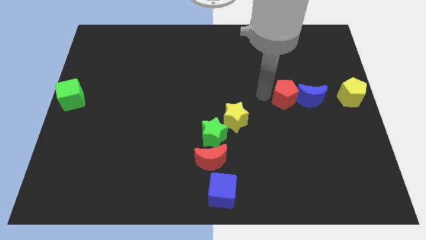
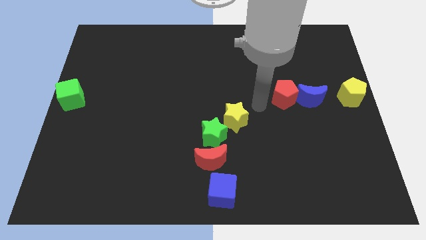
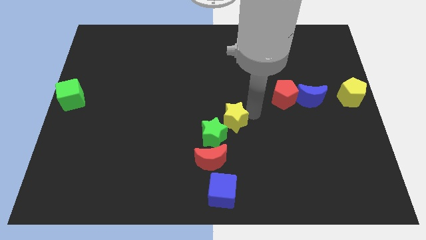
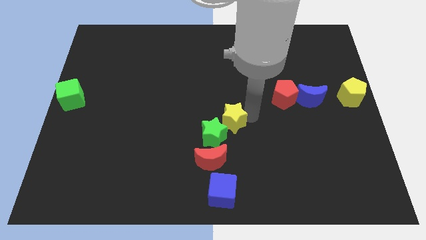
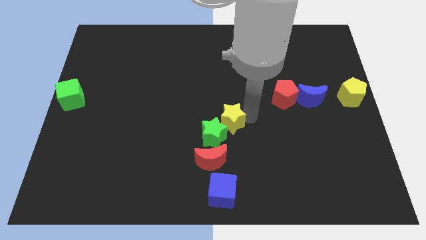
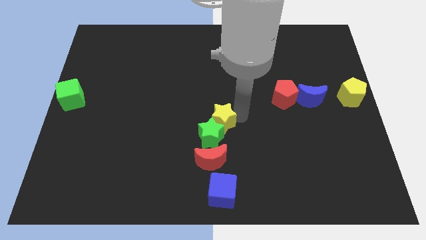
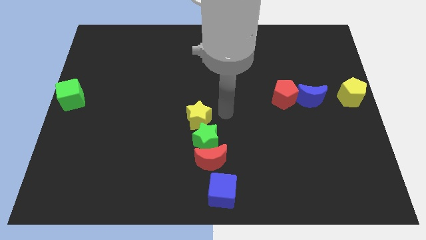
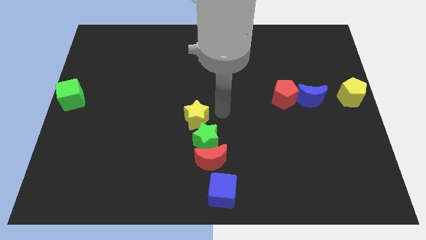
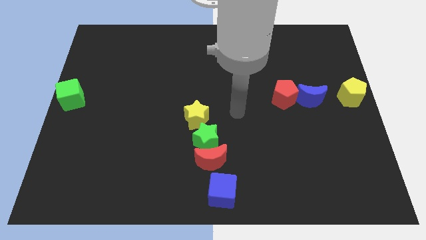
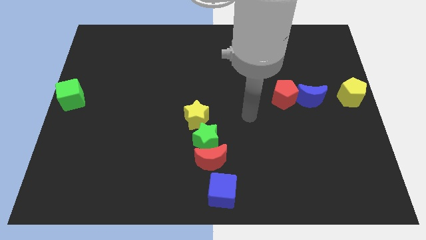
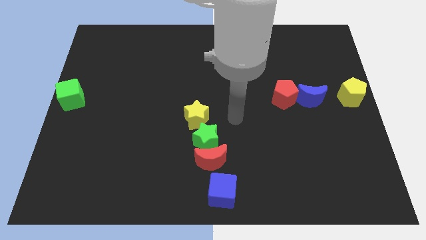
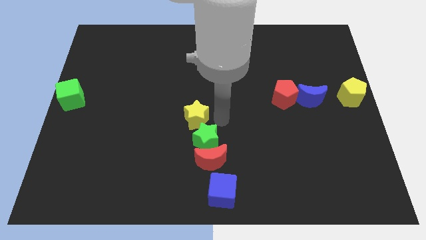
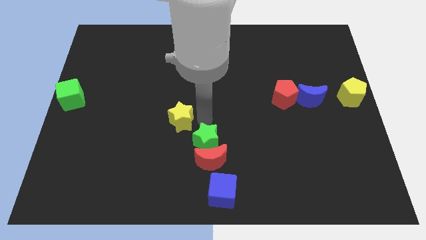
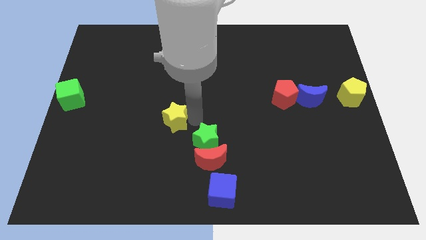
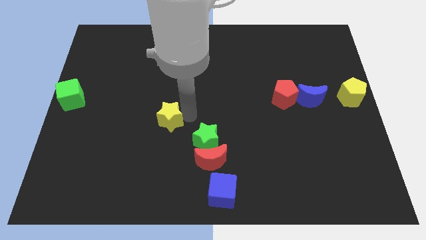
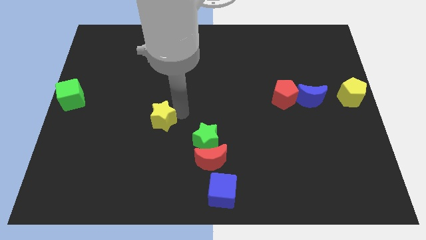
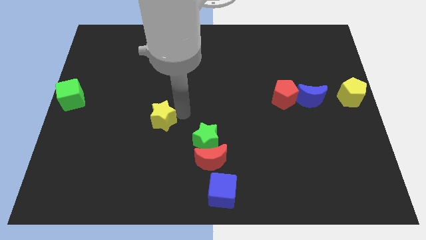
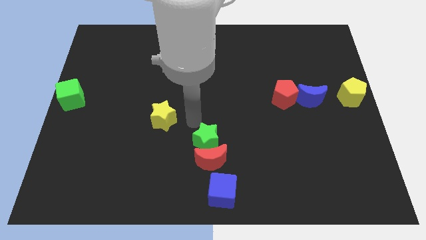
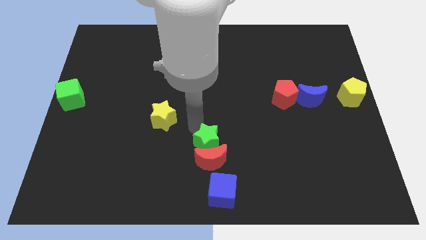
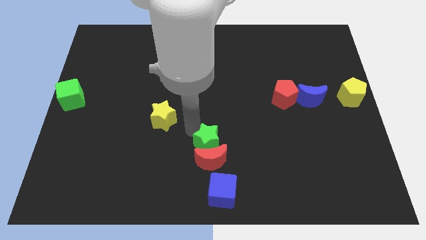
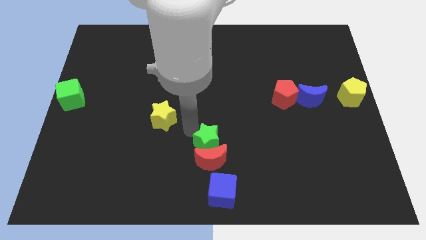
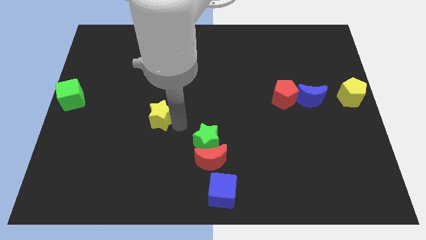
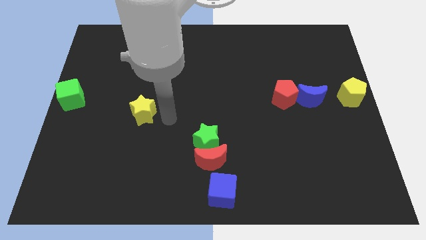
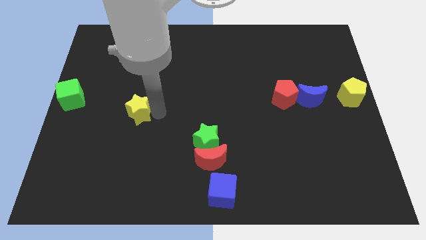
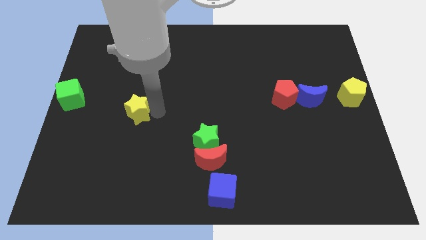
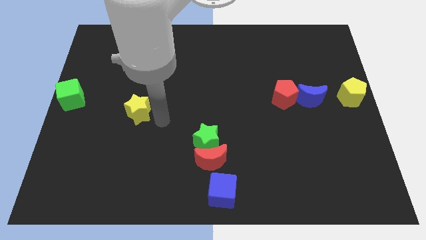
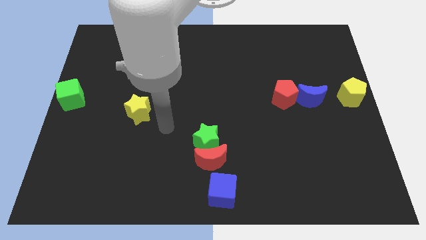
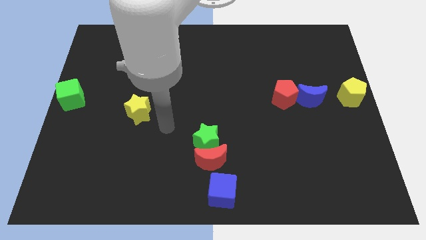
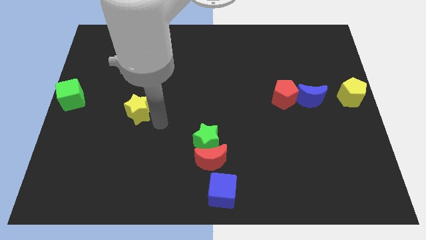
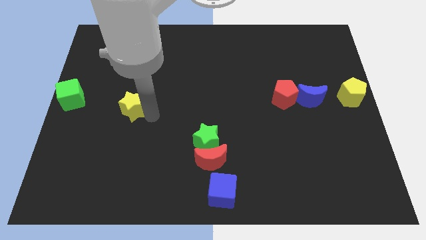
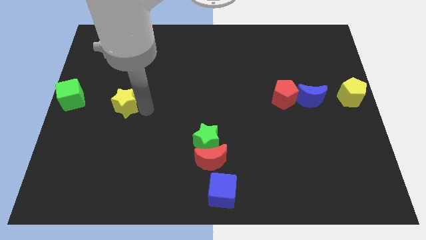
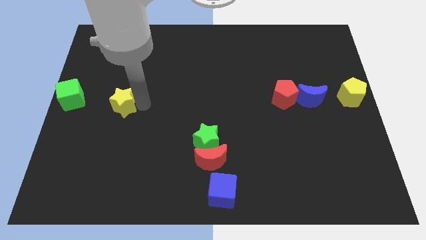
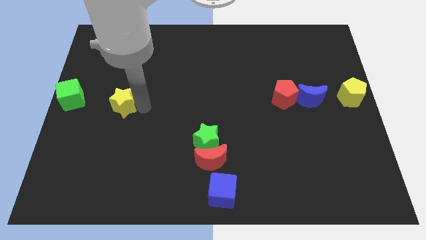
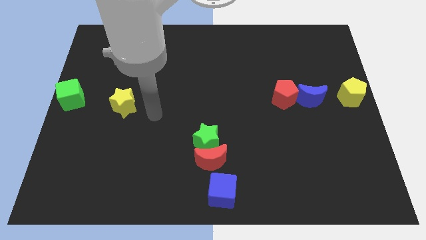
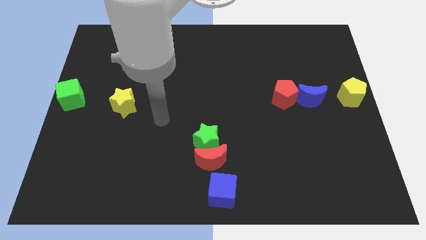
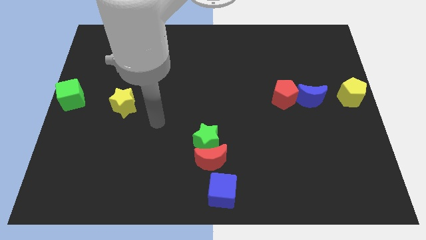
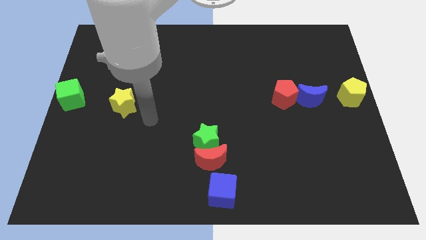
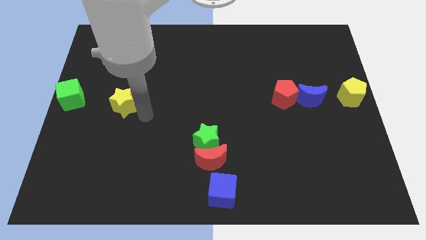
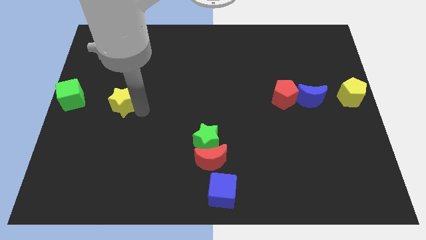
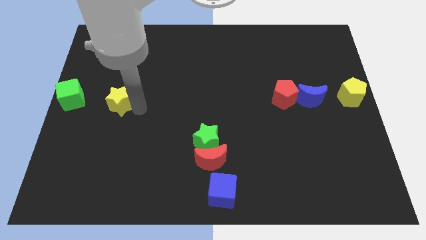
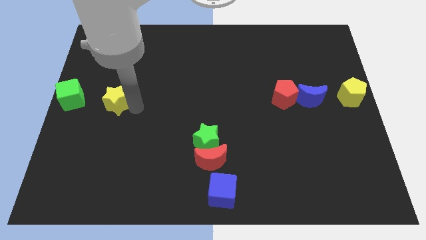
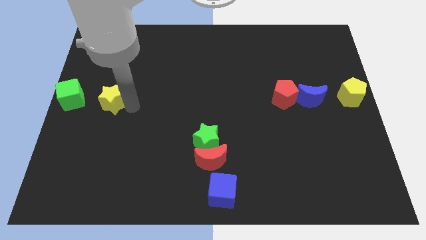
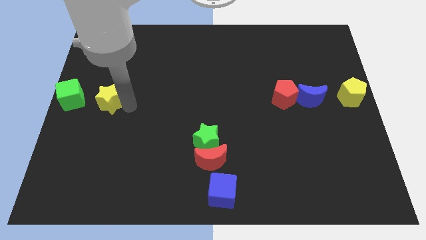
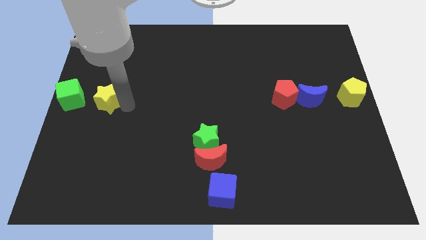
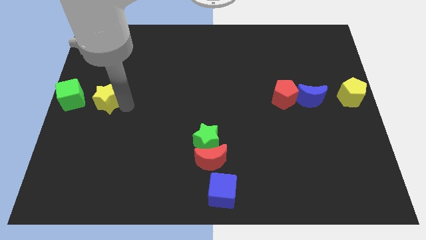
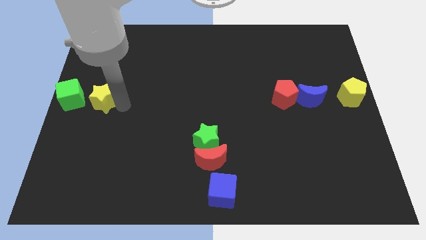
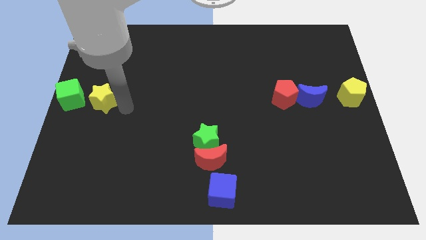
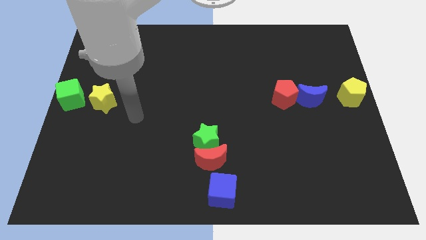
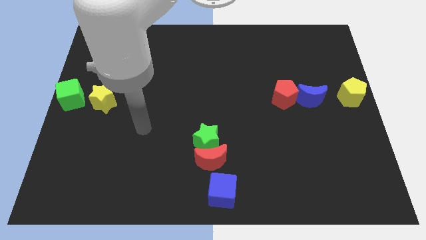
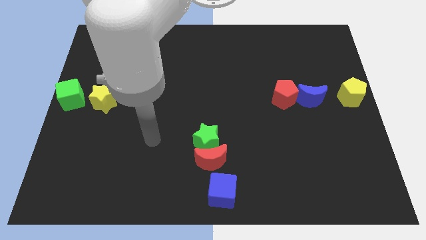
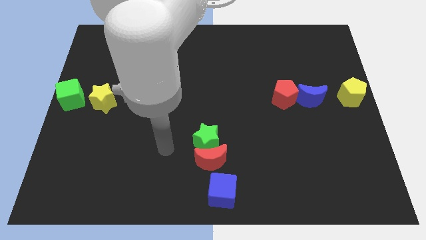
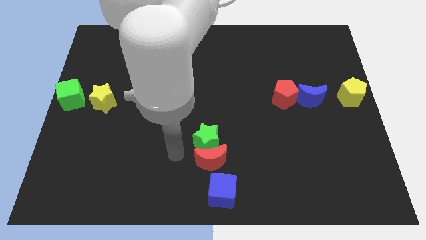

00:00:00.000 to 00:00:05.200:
move the yellow star to the right side of the green cube

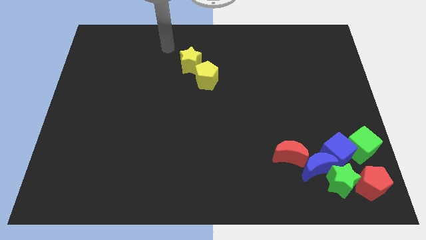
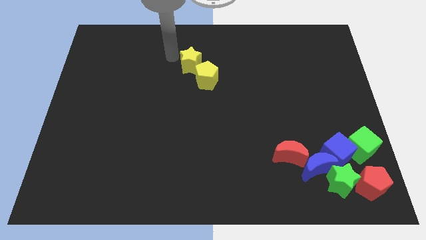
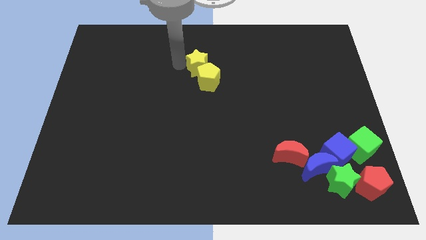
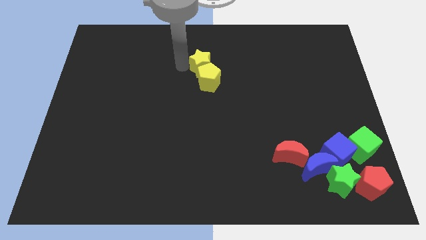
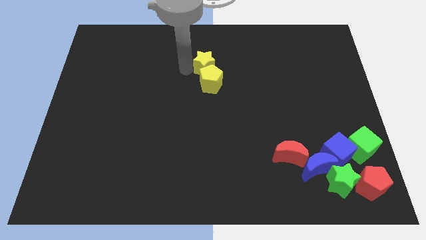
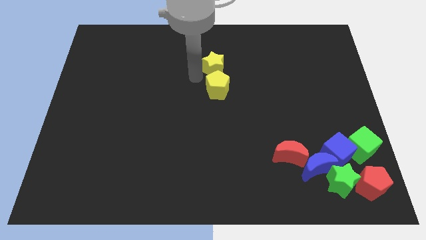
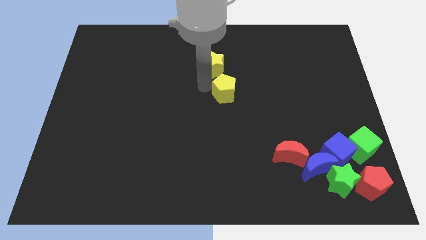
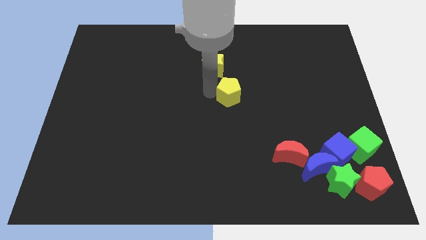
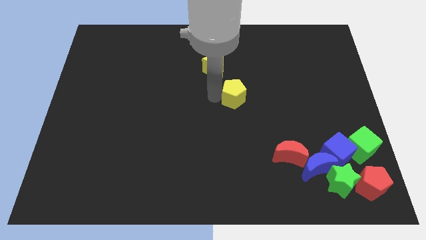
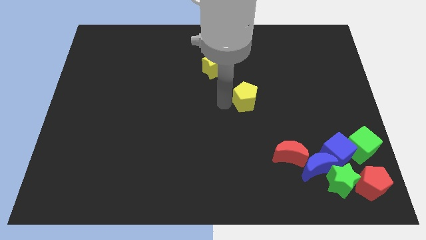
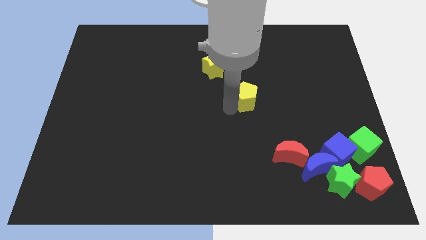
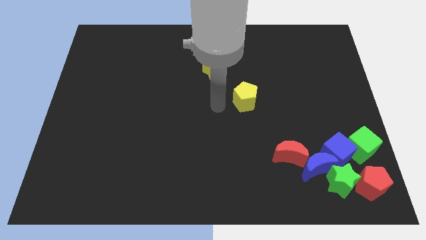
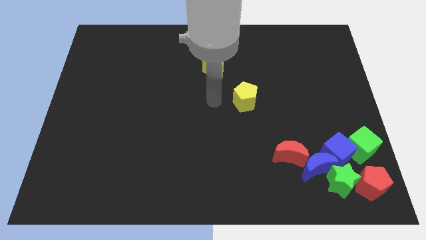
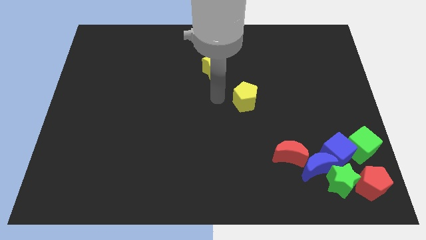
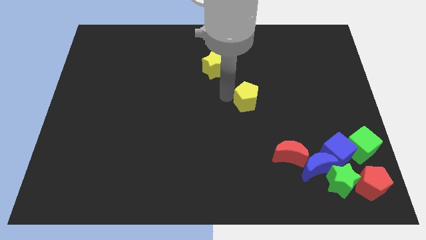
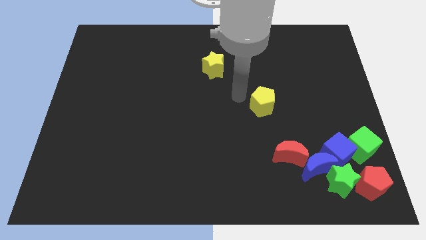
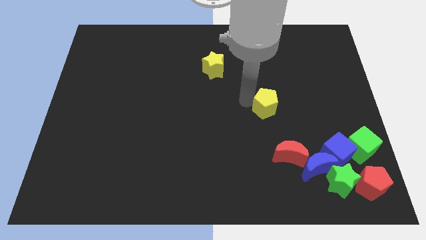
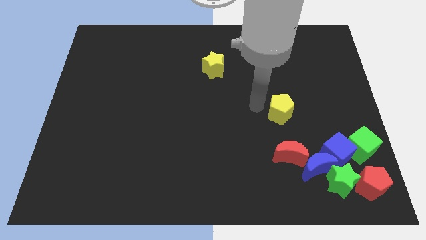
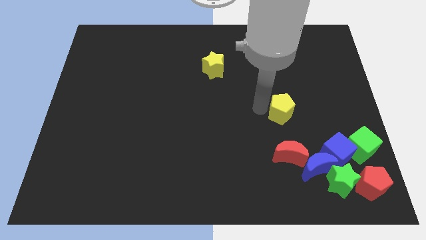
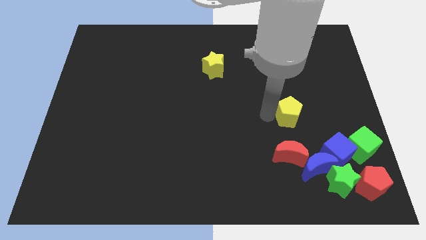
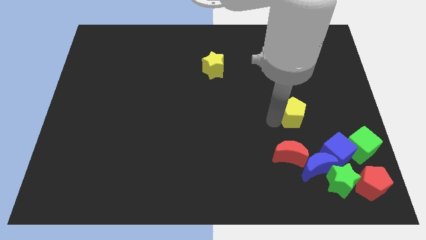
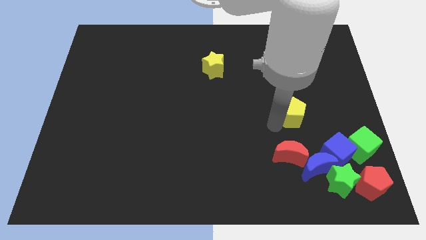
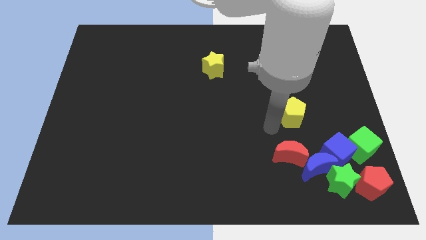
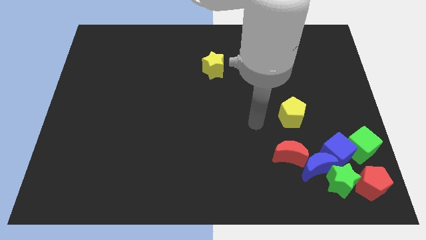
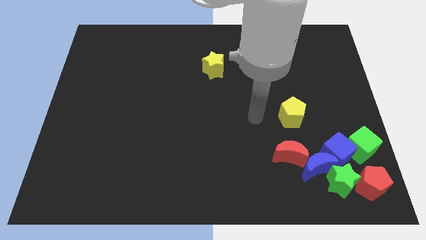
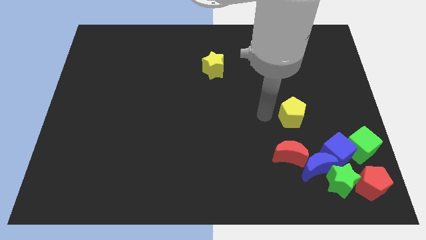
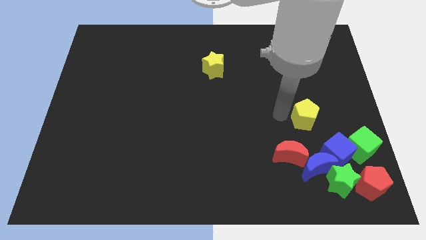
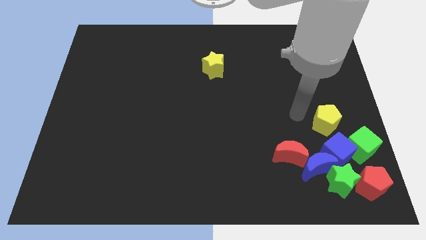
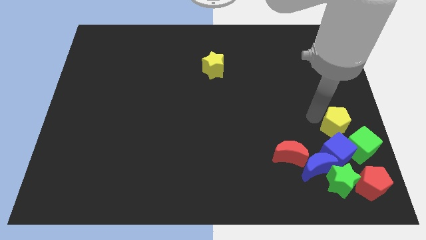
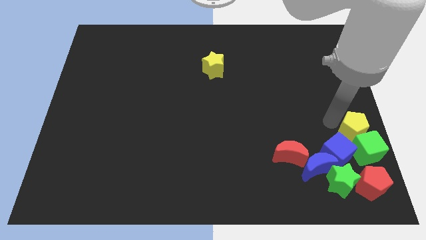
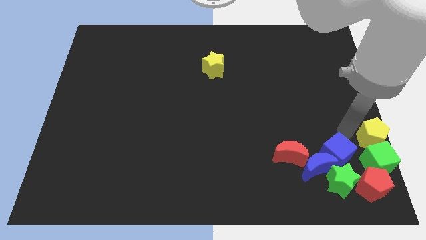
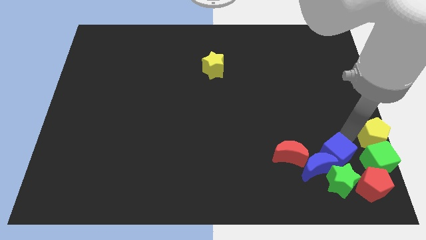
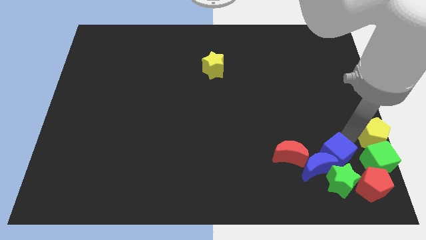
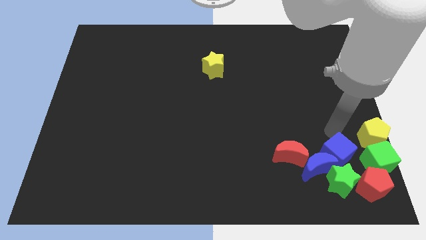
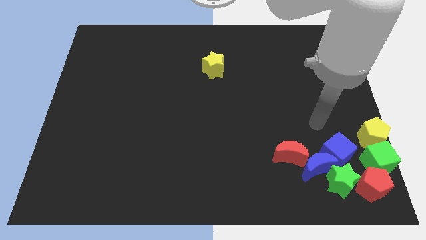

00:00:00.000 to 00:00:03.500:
place the yellow pentagon on top of green cube

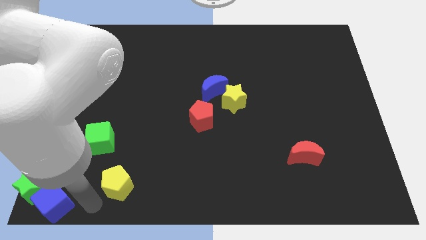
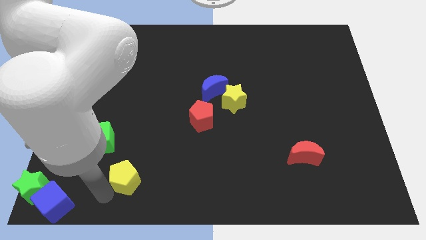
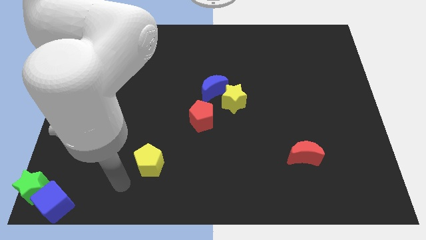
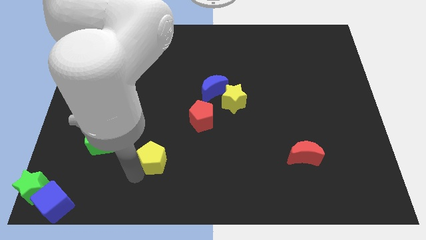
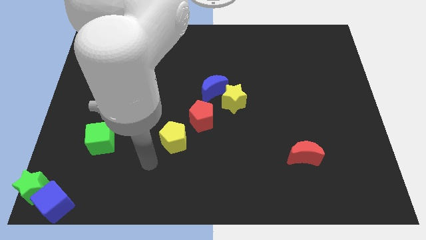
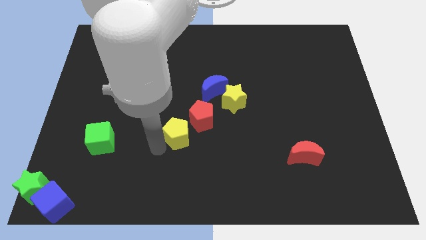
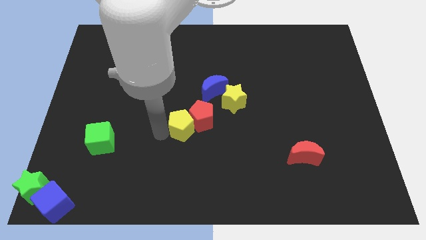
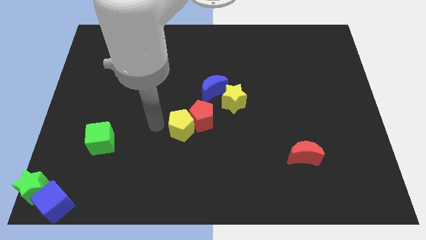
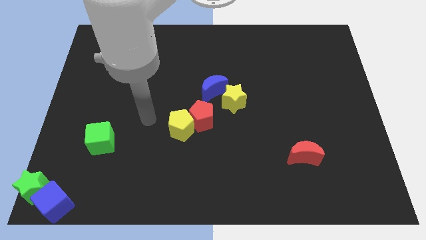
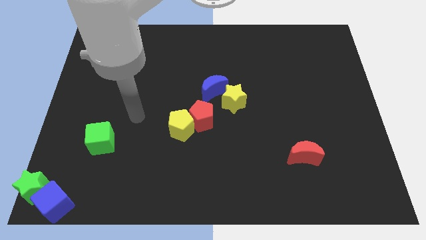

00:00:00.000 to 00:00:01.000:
push the yellow pentagon close to the red pentagon
